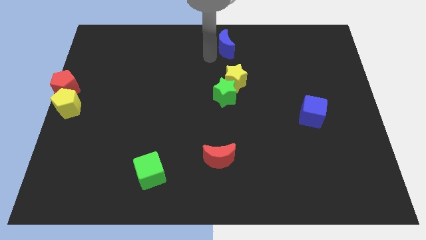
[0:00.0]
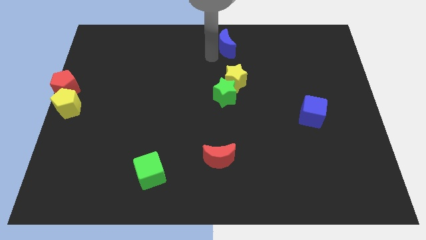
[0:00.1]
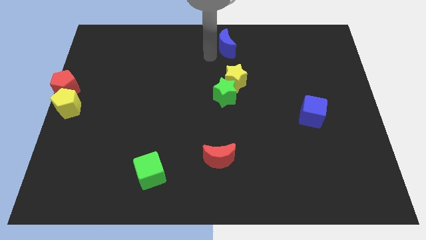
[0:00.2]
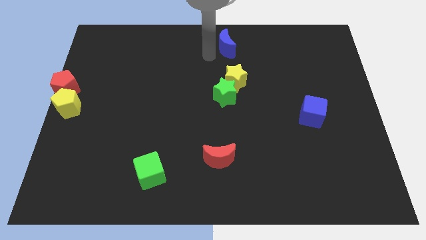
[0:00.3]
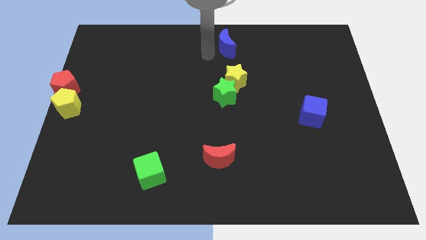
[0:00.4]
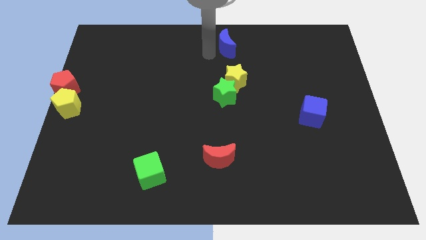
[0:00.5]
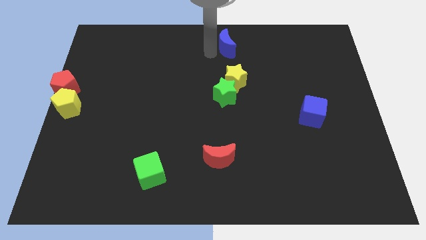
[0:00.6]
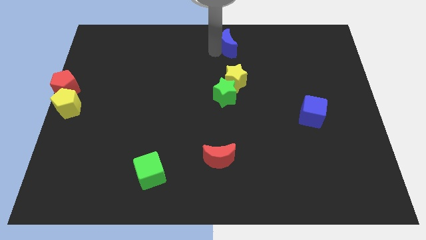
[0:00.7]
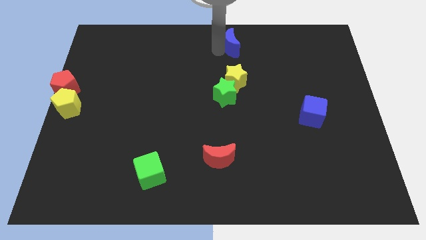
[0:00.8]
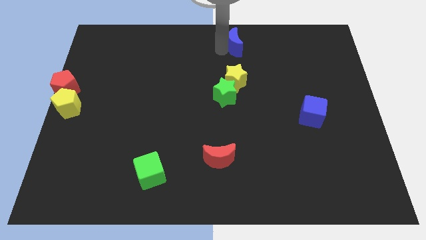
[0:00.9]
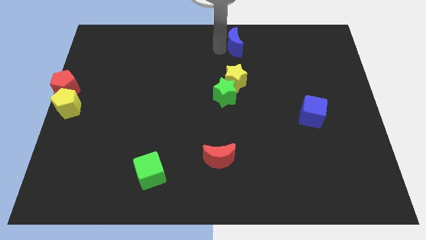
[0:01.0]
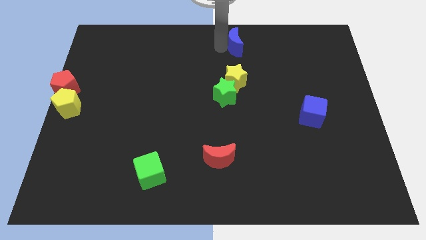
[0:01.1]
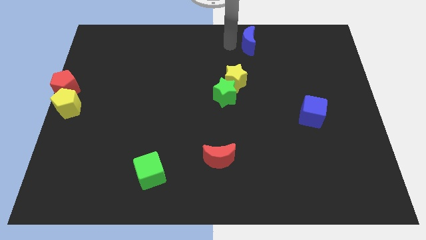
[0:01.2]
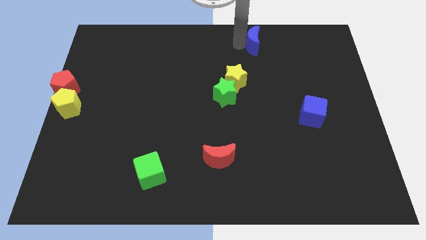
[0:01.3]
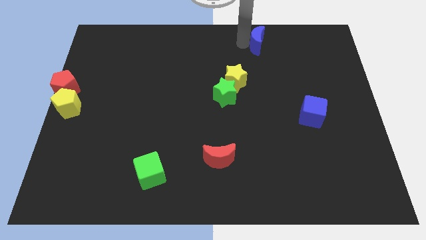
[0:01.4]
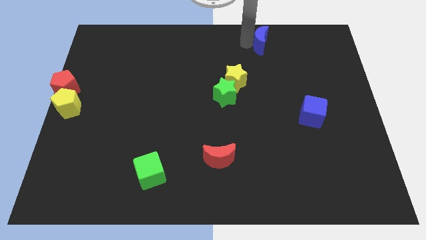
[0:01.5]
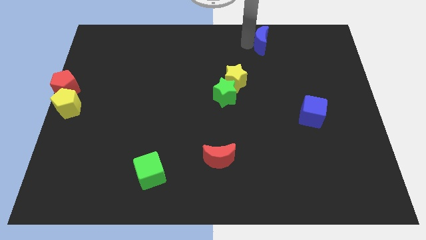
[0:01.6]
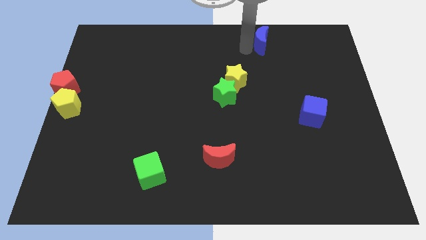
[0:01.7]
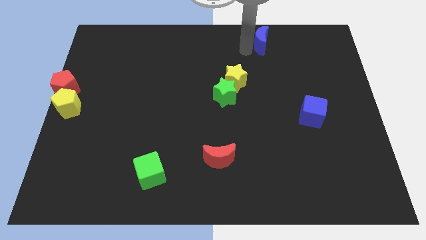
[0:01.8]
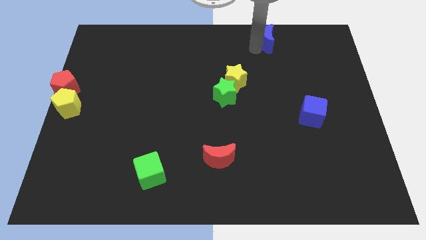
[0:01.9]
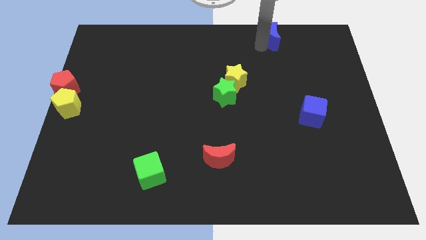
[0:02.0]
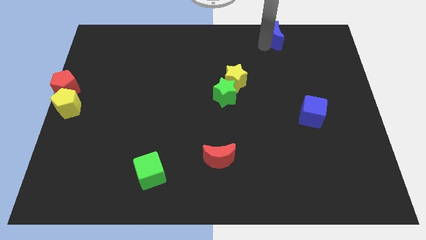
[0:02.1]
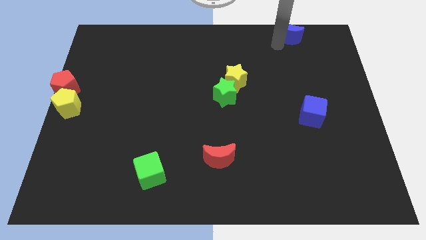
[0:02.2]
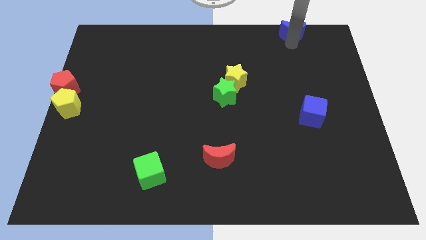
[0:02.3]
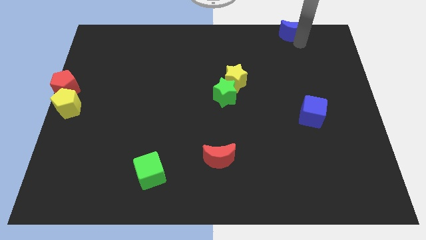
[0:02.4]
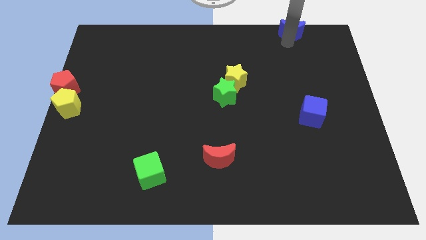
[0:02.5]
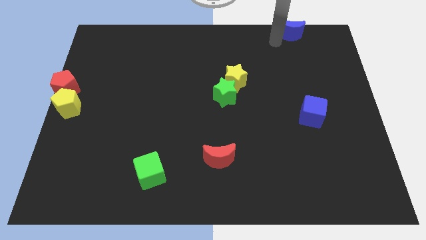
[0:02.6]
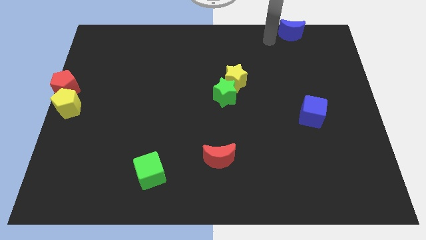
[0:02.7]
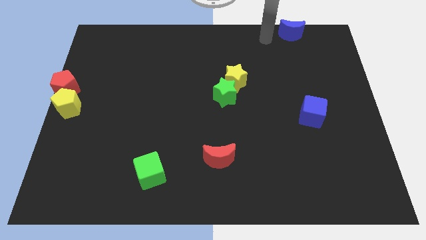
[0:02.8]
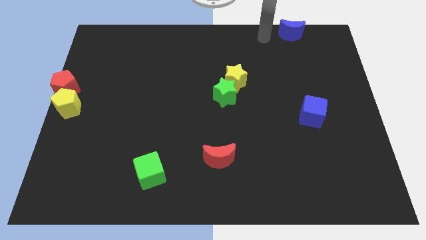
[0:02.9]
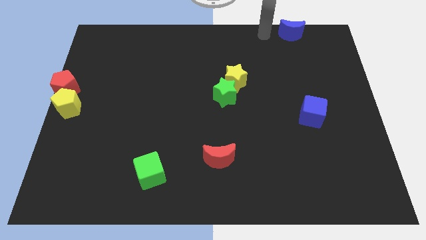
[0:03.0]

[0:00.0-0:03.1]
push the blue crescent towards the top right

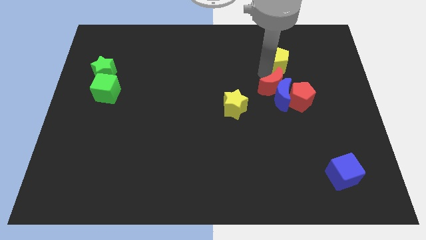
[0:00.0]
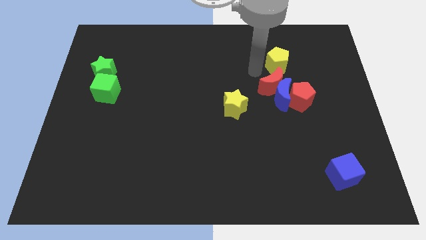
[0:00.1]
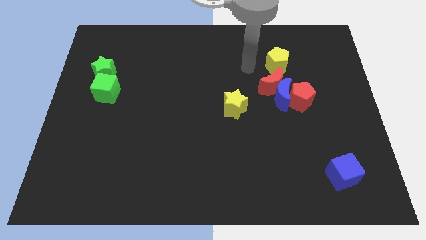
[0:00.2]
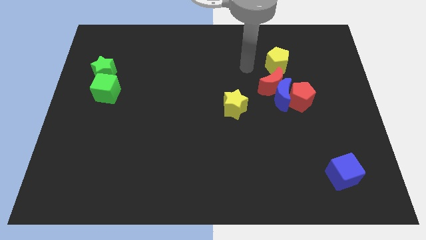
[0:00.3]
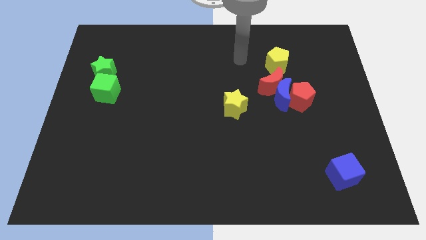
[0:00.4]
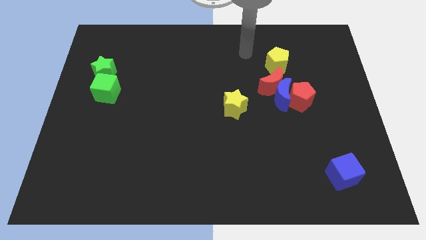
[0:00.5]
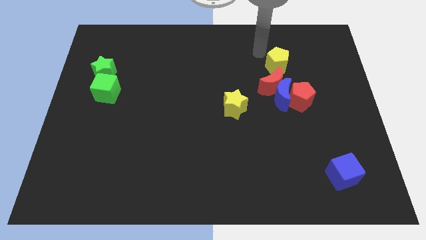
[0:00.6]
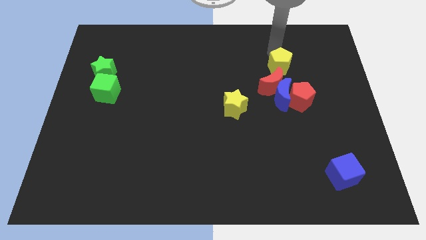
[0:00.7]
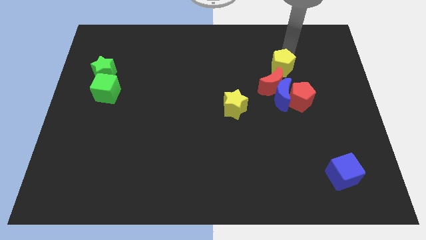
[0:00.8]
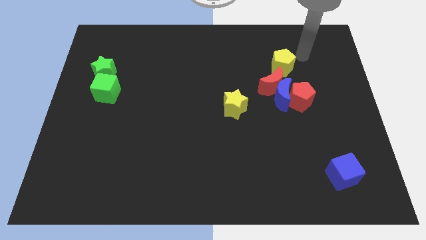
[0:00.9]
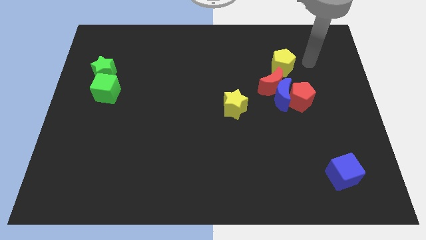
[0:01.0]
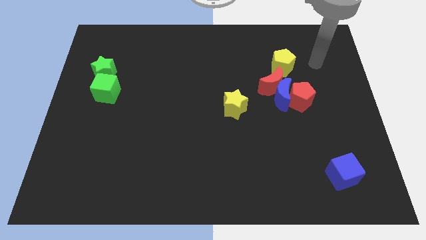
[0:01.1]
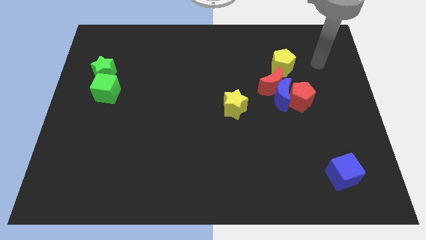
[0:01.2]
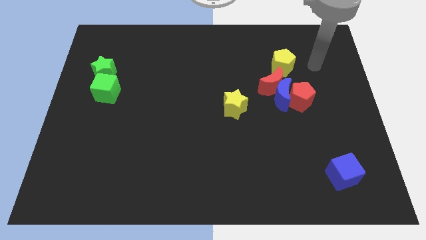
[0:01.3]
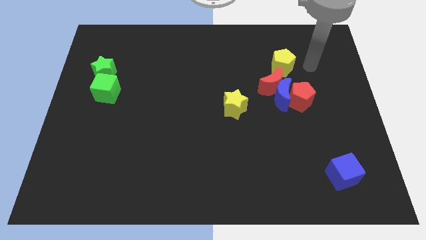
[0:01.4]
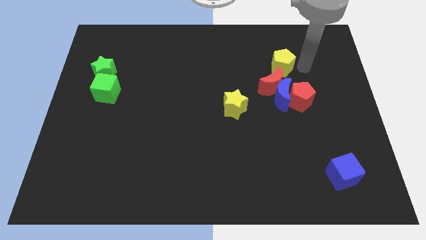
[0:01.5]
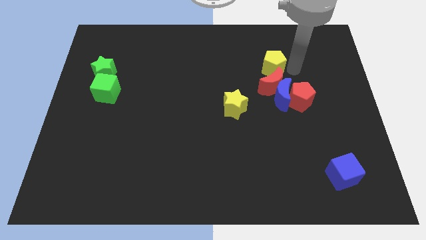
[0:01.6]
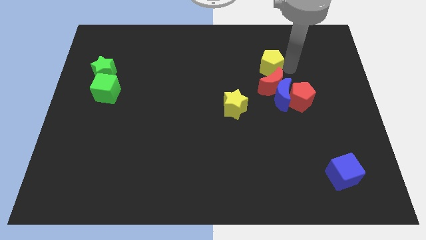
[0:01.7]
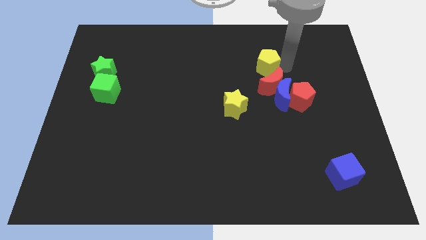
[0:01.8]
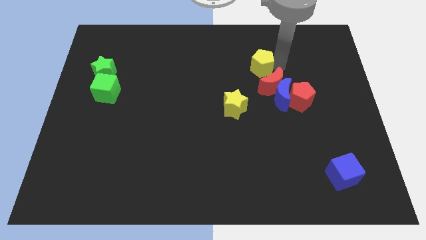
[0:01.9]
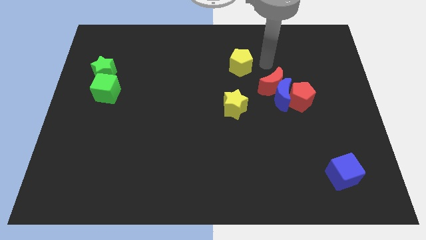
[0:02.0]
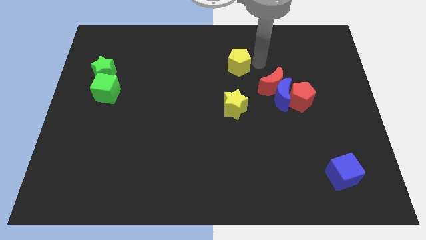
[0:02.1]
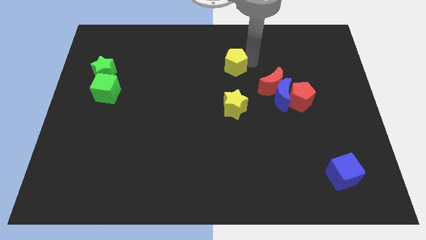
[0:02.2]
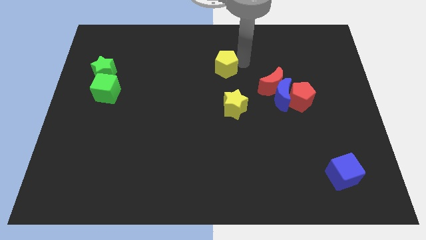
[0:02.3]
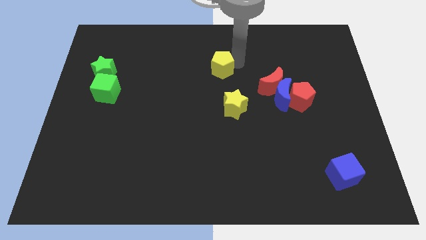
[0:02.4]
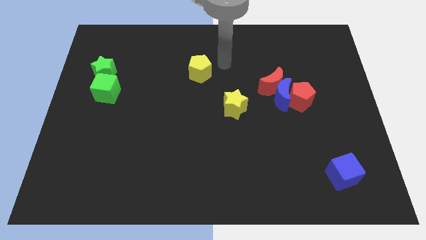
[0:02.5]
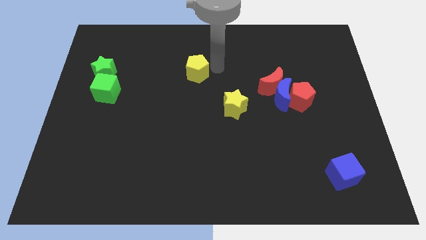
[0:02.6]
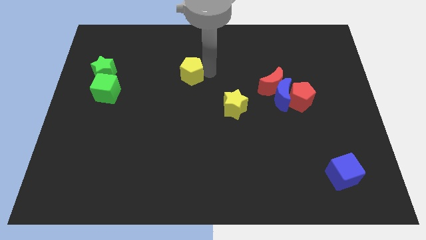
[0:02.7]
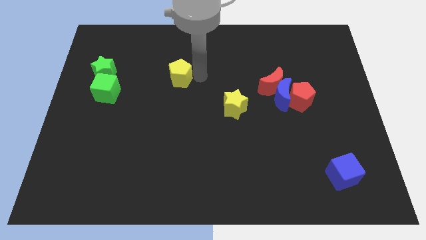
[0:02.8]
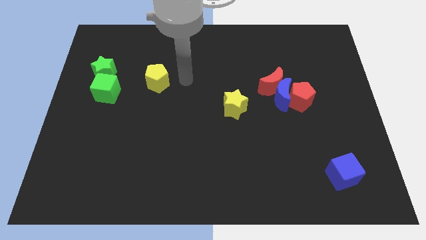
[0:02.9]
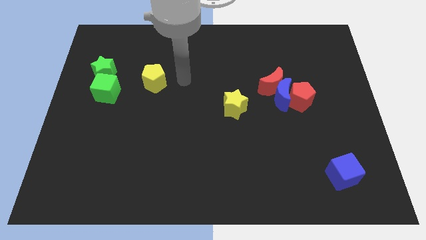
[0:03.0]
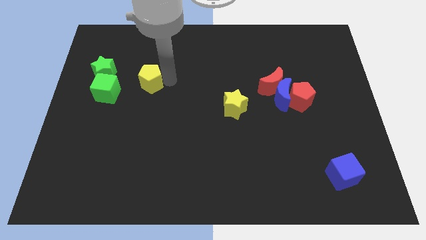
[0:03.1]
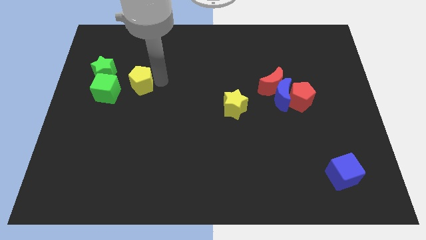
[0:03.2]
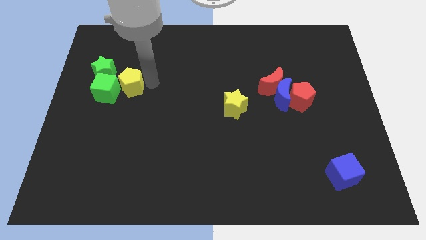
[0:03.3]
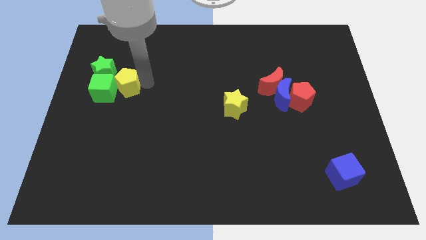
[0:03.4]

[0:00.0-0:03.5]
push the yellow pentagon to the left side of the board

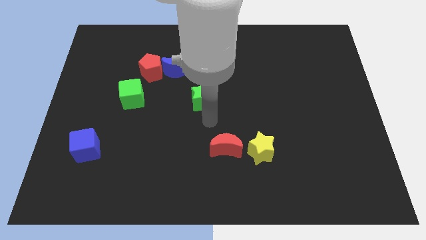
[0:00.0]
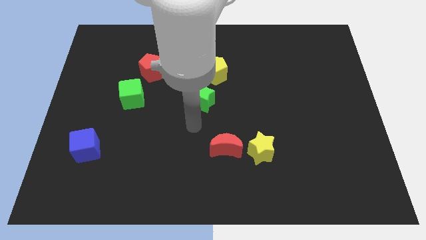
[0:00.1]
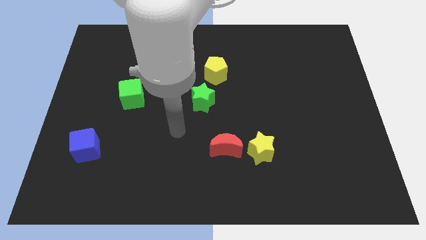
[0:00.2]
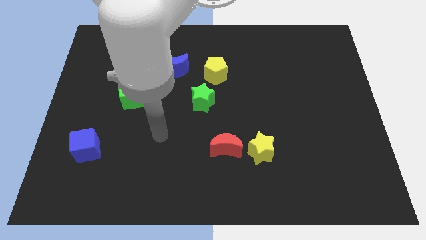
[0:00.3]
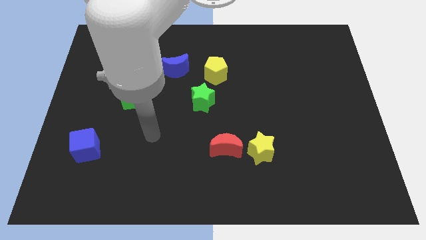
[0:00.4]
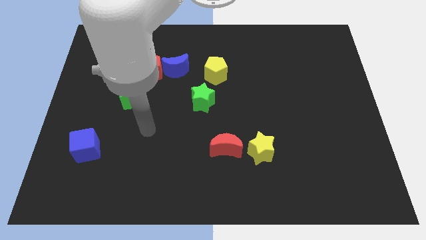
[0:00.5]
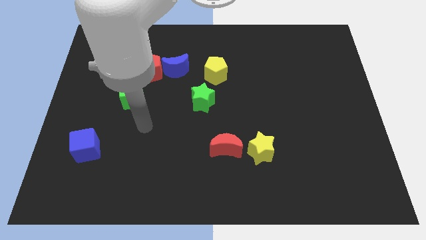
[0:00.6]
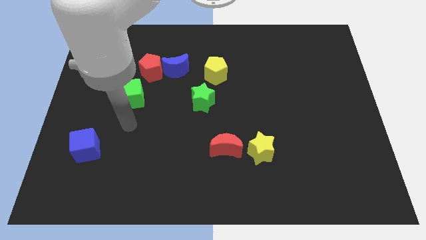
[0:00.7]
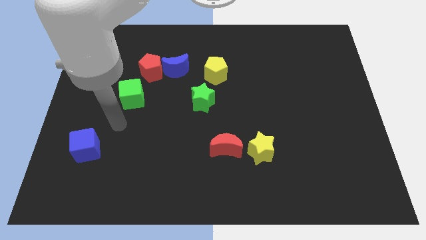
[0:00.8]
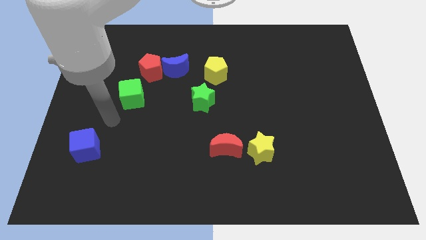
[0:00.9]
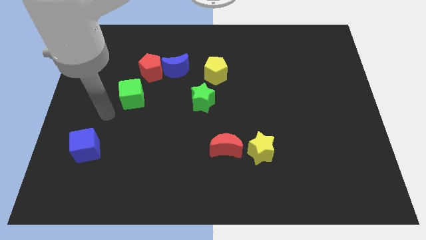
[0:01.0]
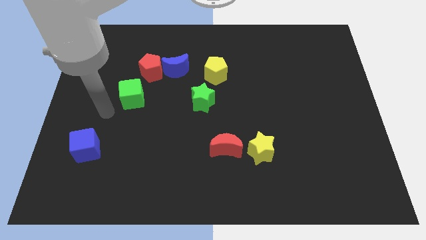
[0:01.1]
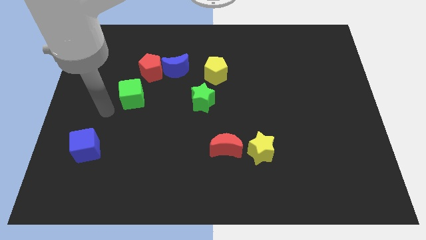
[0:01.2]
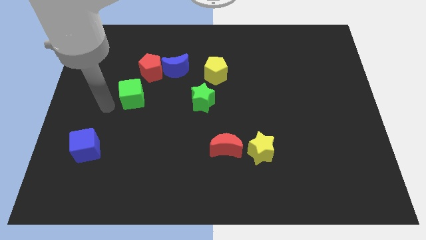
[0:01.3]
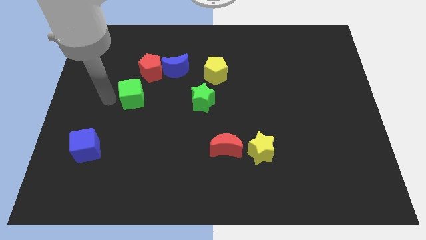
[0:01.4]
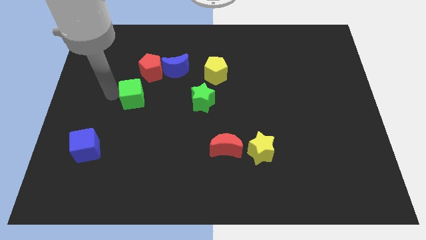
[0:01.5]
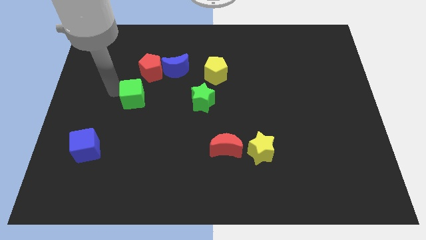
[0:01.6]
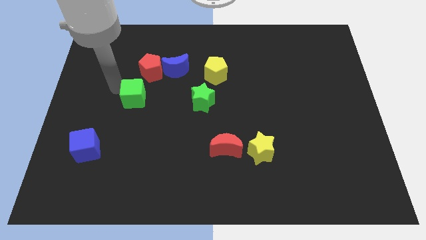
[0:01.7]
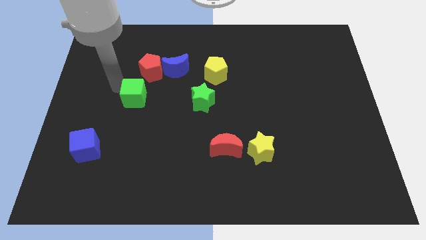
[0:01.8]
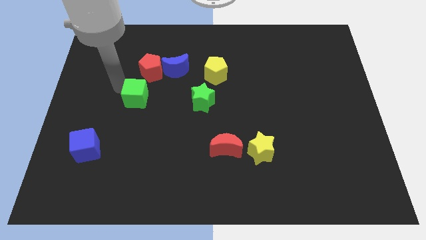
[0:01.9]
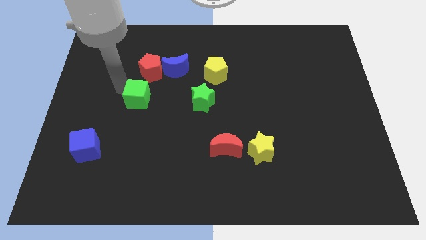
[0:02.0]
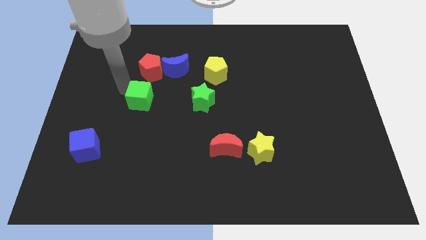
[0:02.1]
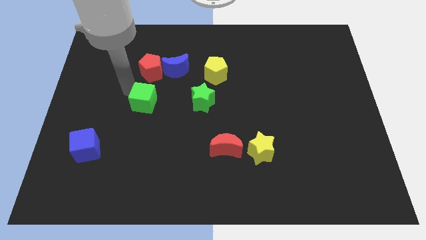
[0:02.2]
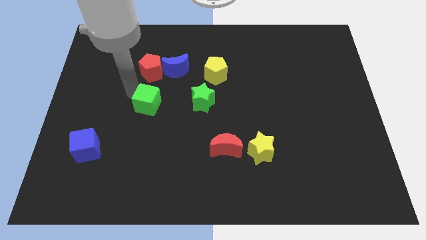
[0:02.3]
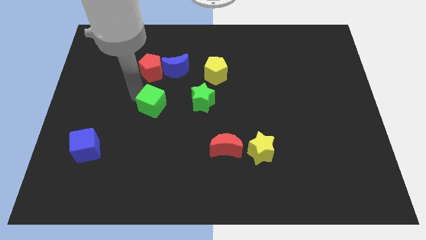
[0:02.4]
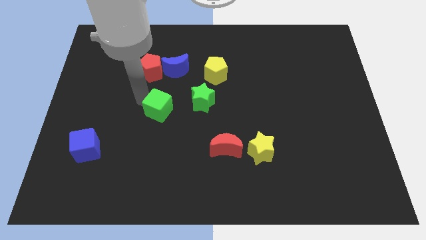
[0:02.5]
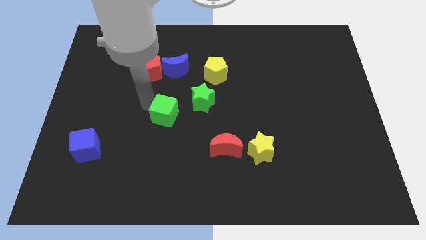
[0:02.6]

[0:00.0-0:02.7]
place green cube below red pentagon
